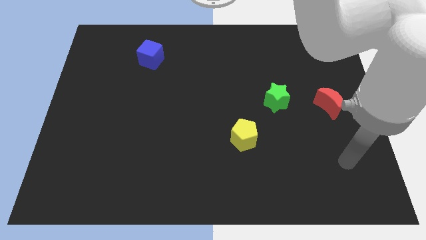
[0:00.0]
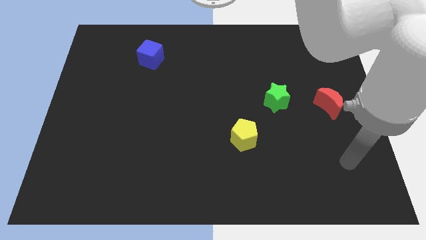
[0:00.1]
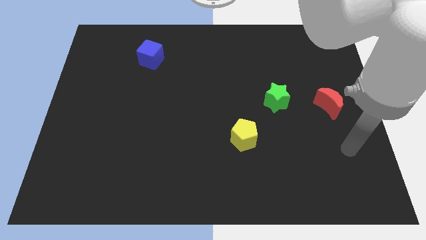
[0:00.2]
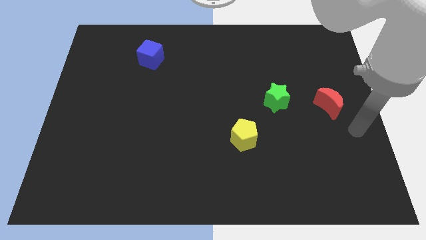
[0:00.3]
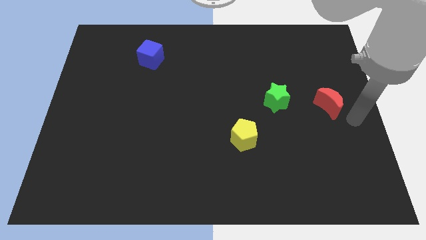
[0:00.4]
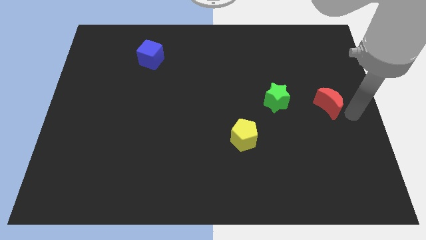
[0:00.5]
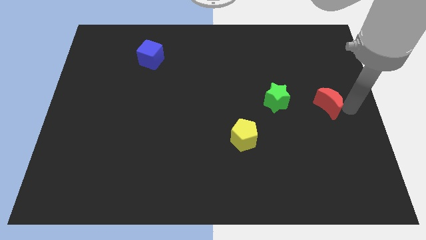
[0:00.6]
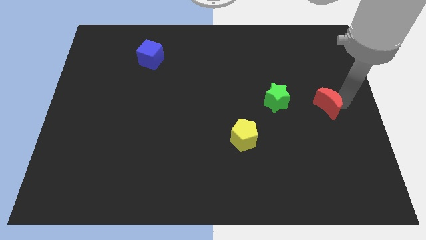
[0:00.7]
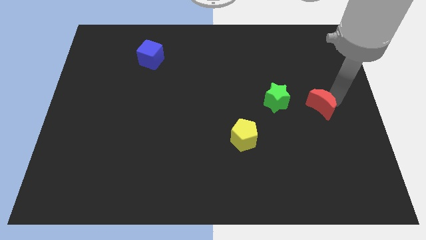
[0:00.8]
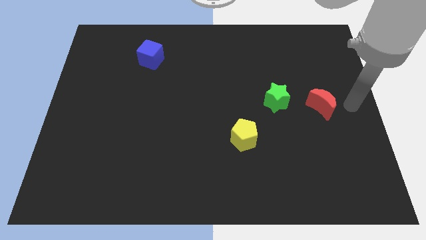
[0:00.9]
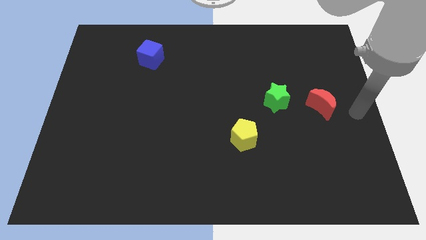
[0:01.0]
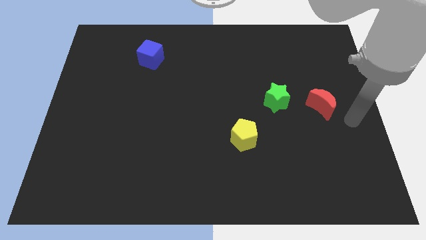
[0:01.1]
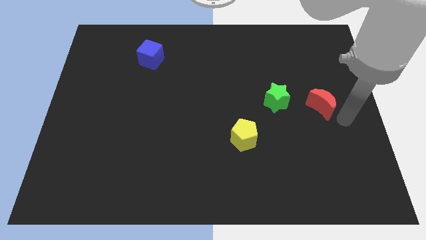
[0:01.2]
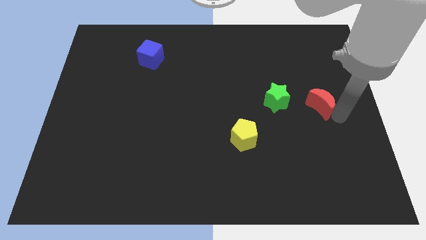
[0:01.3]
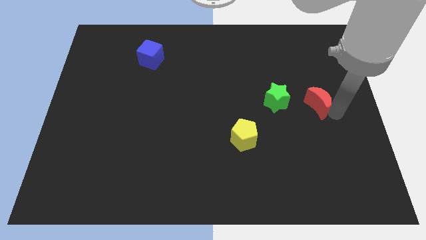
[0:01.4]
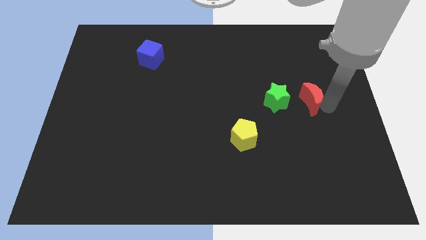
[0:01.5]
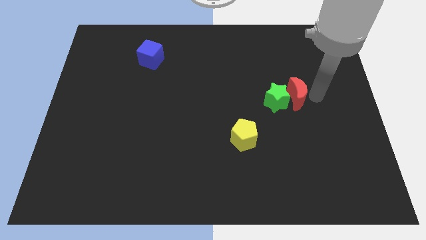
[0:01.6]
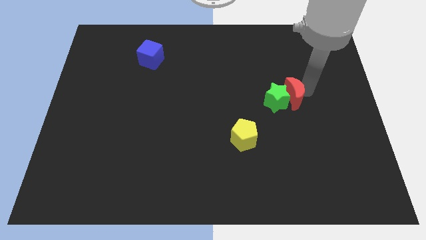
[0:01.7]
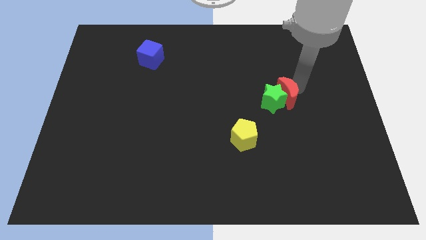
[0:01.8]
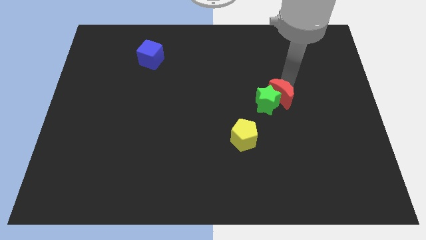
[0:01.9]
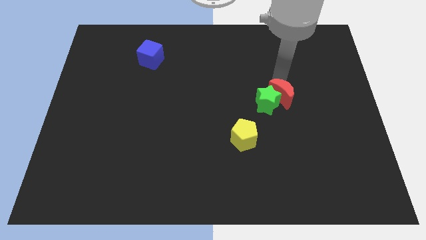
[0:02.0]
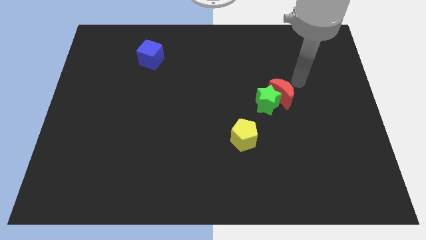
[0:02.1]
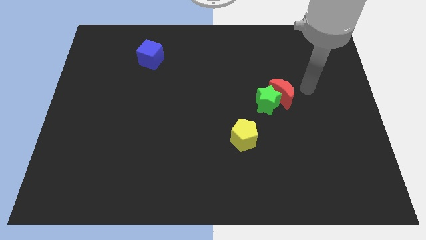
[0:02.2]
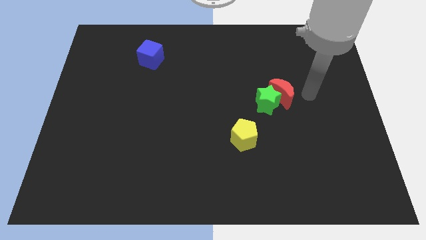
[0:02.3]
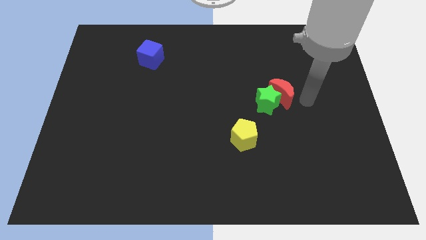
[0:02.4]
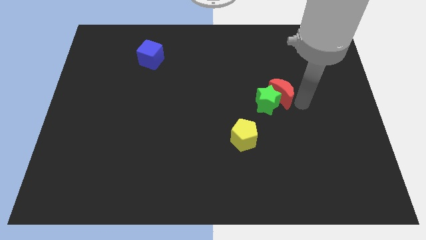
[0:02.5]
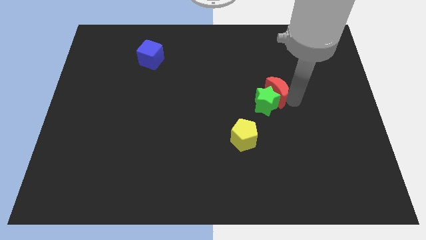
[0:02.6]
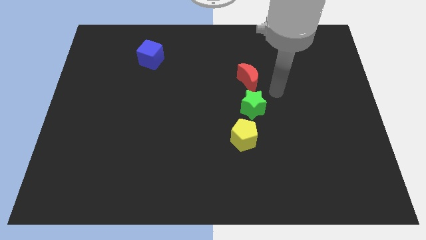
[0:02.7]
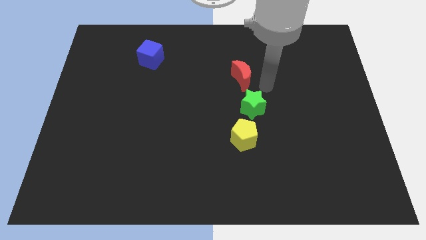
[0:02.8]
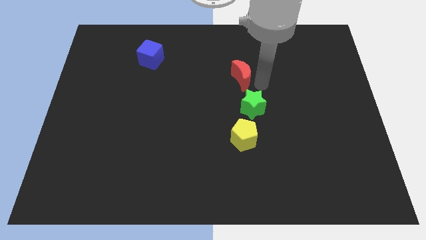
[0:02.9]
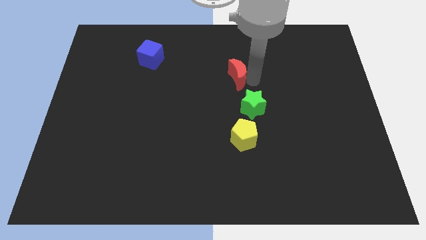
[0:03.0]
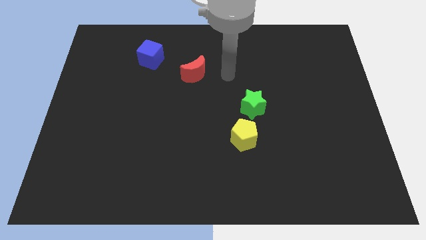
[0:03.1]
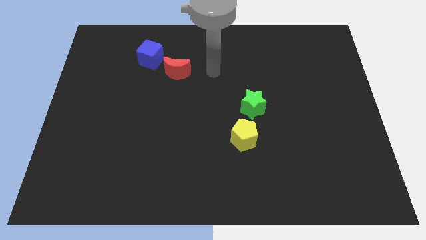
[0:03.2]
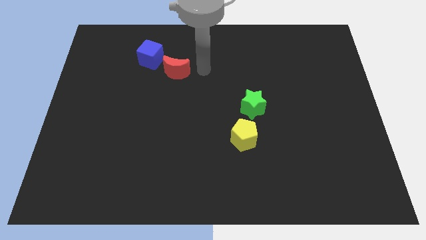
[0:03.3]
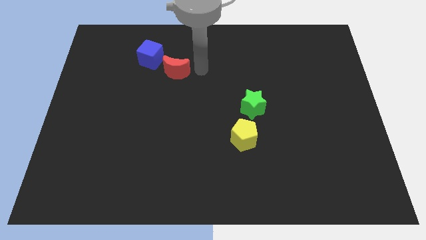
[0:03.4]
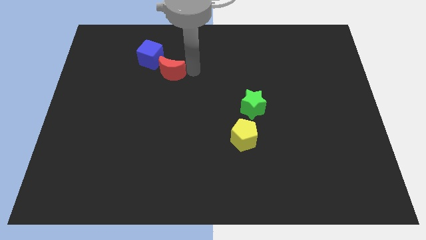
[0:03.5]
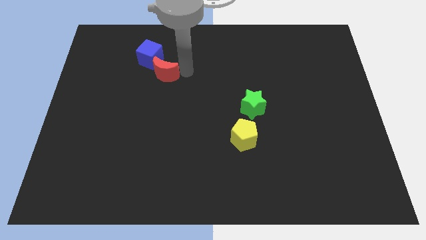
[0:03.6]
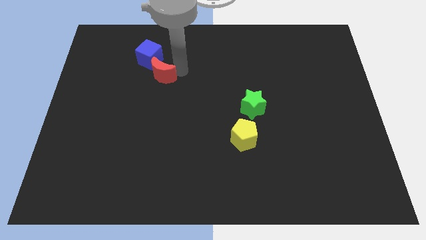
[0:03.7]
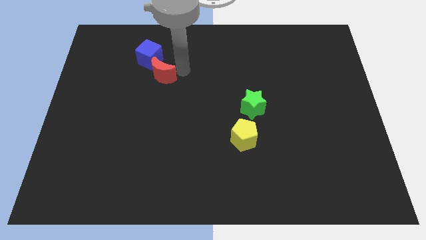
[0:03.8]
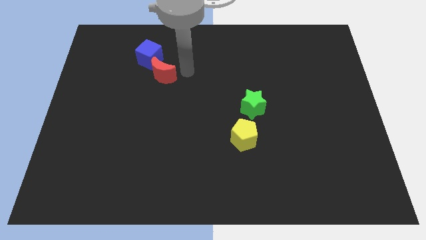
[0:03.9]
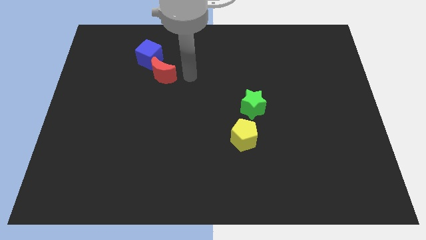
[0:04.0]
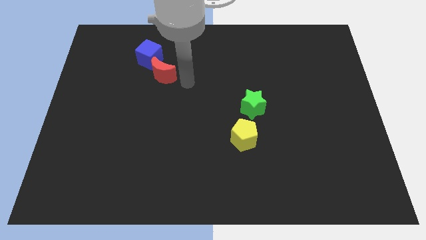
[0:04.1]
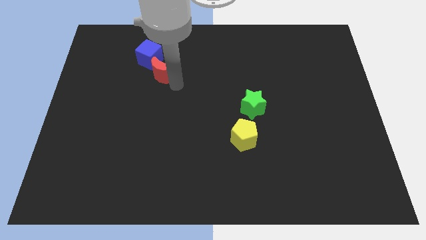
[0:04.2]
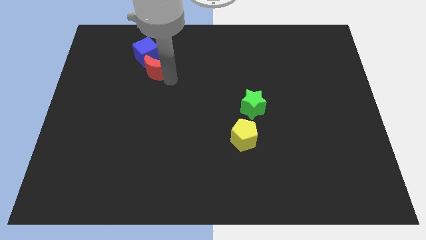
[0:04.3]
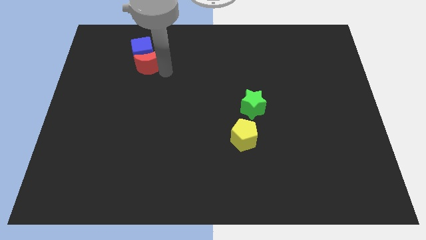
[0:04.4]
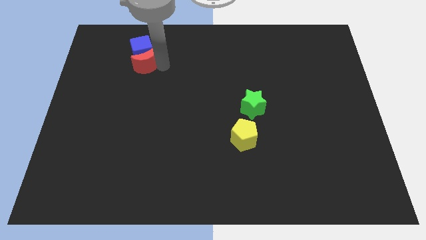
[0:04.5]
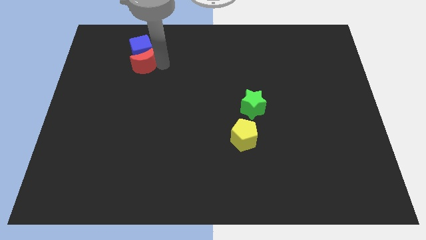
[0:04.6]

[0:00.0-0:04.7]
put the red block towards the blue block

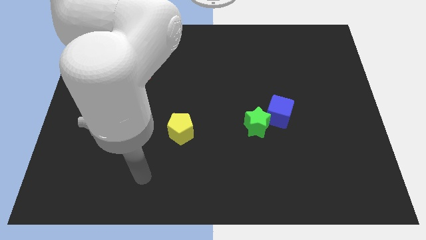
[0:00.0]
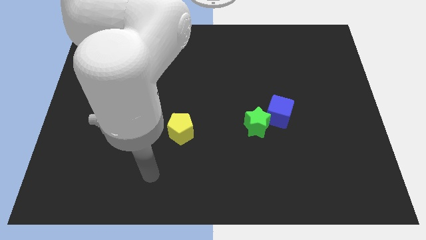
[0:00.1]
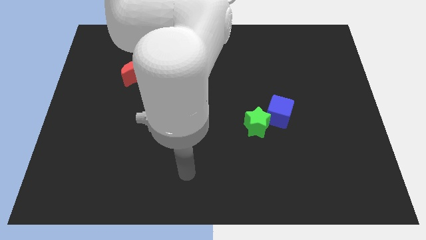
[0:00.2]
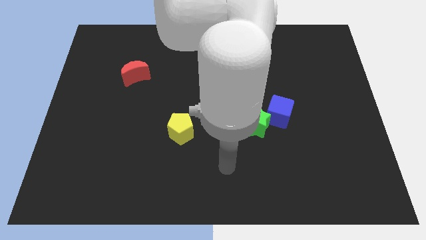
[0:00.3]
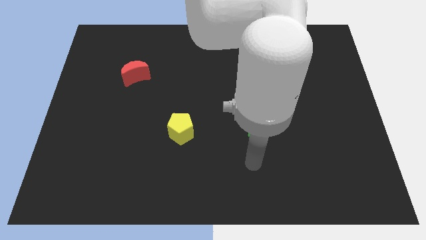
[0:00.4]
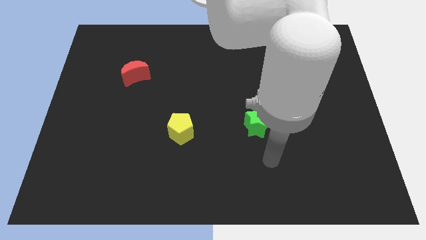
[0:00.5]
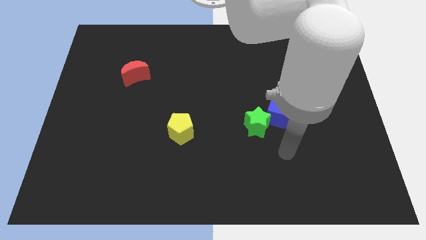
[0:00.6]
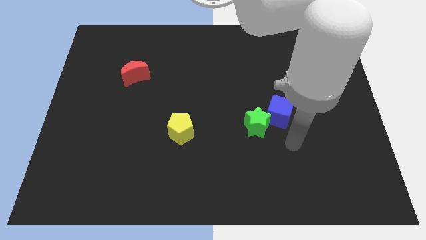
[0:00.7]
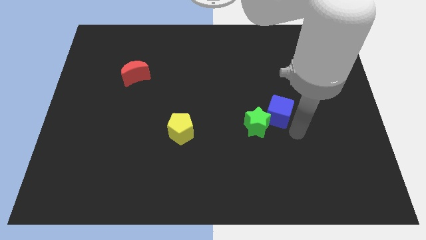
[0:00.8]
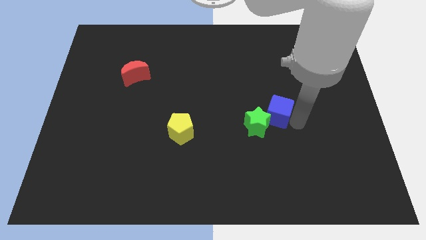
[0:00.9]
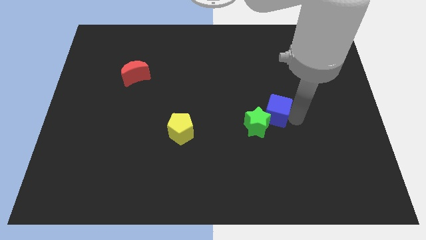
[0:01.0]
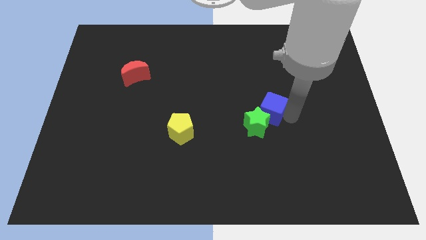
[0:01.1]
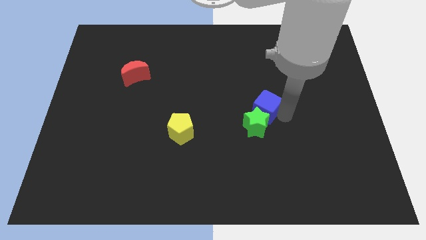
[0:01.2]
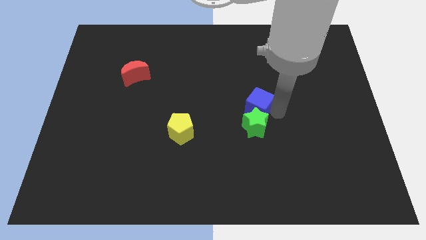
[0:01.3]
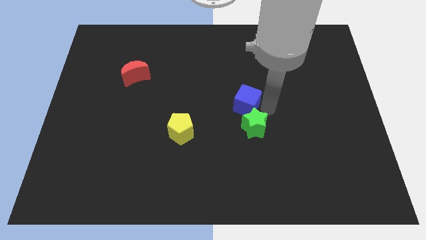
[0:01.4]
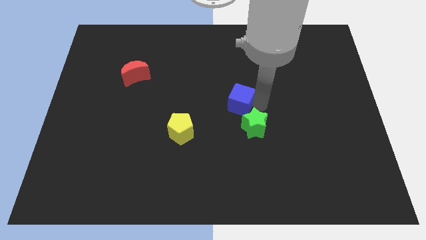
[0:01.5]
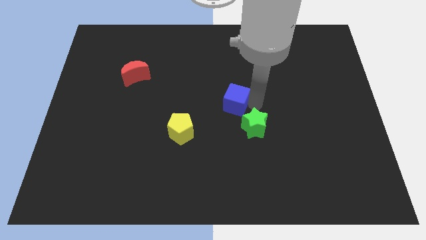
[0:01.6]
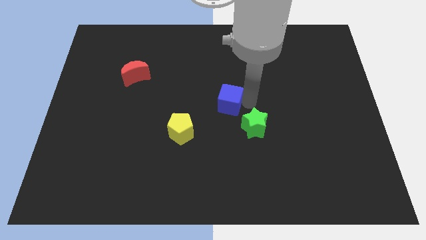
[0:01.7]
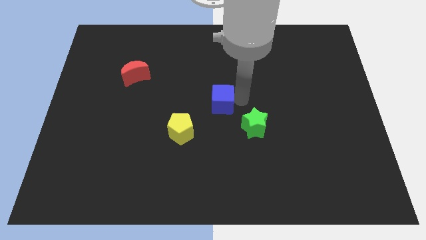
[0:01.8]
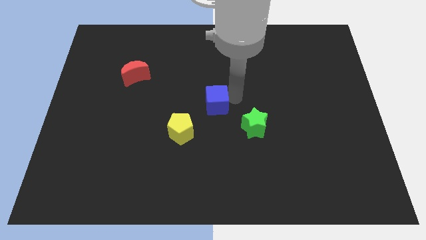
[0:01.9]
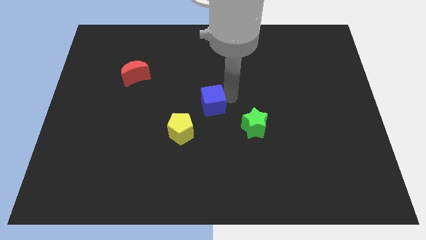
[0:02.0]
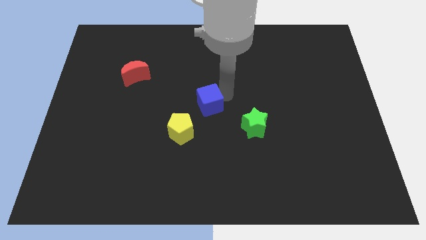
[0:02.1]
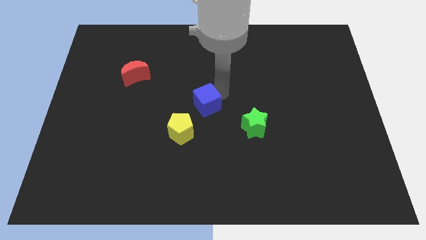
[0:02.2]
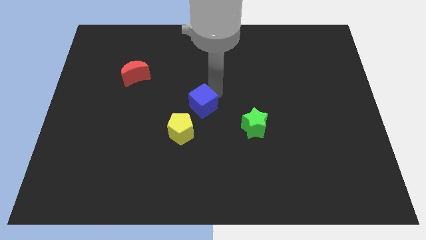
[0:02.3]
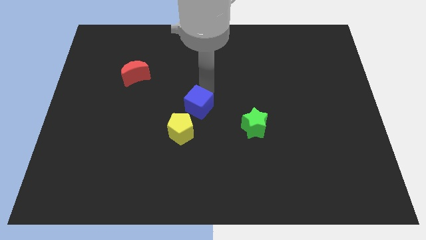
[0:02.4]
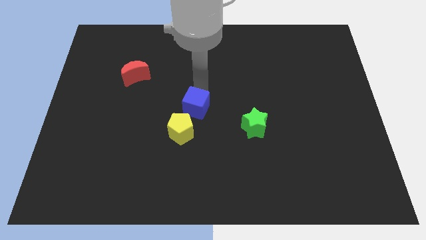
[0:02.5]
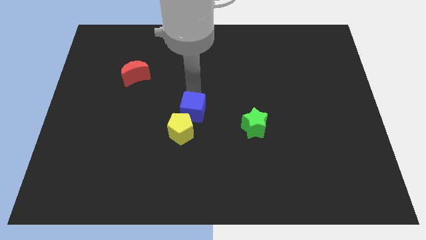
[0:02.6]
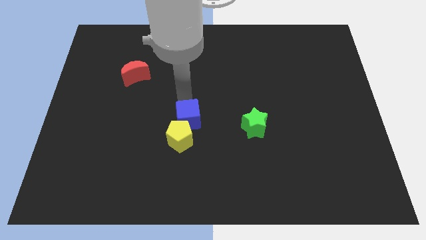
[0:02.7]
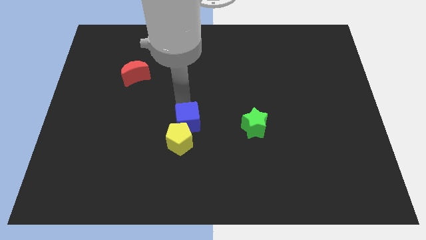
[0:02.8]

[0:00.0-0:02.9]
put the cube towards the yellow block

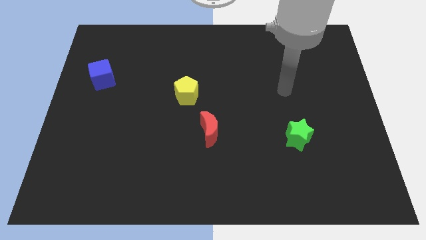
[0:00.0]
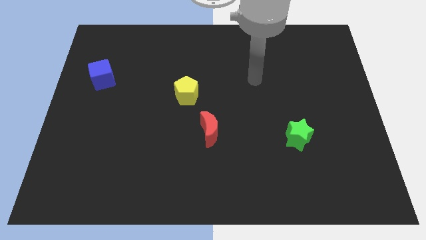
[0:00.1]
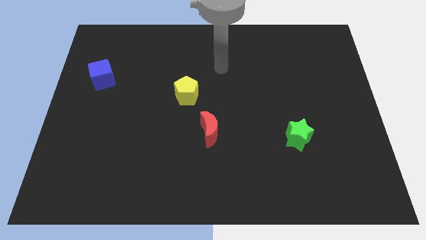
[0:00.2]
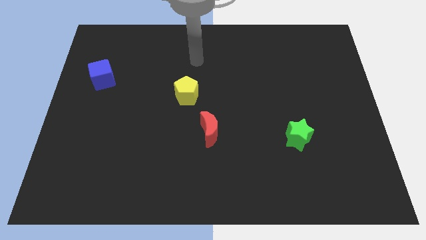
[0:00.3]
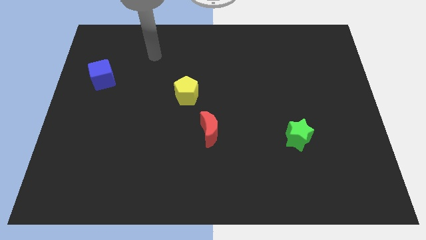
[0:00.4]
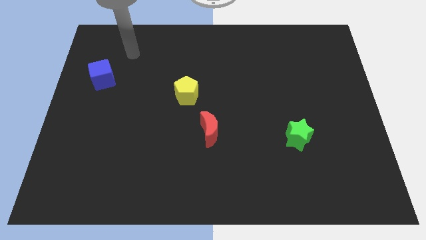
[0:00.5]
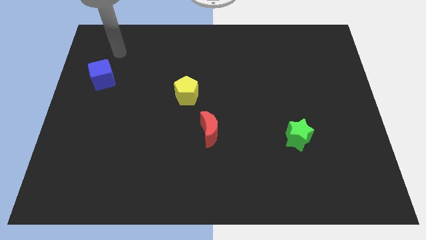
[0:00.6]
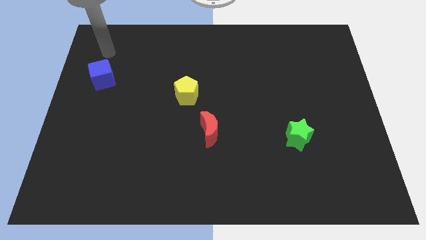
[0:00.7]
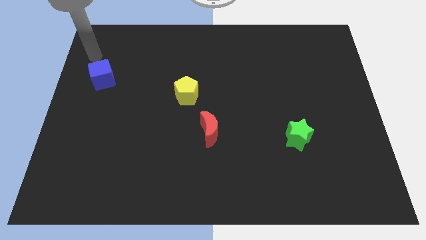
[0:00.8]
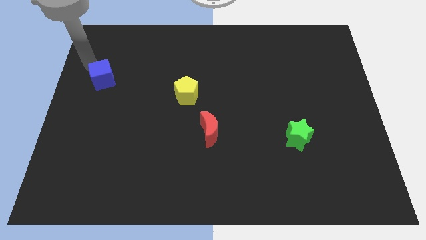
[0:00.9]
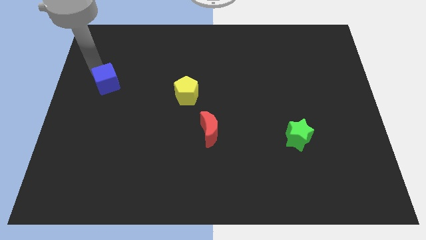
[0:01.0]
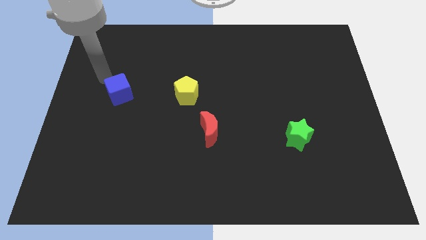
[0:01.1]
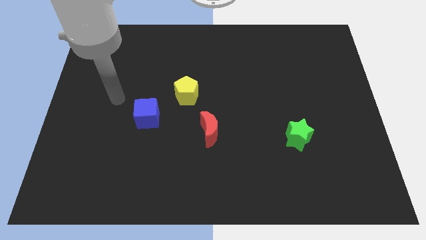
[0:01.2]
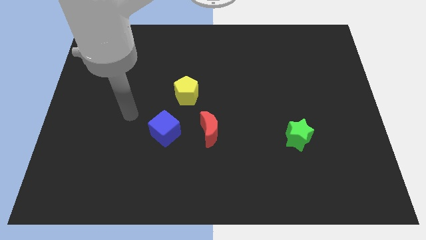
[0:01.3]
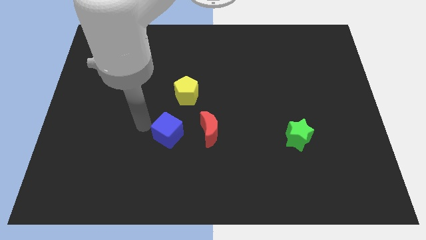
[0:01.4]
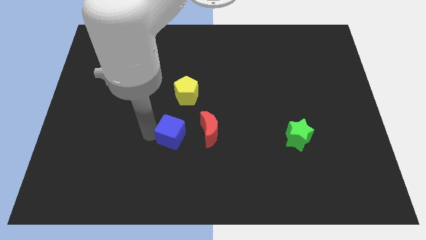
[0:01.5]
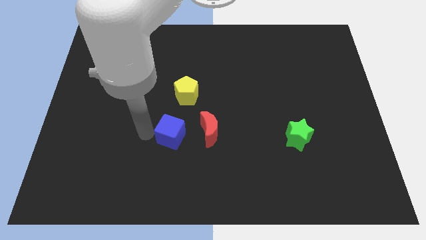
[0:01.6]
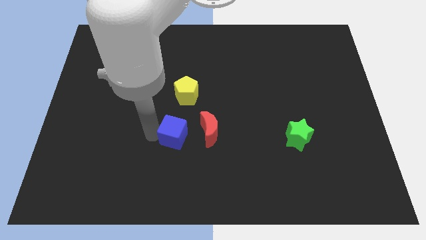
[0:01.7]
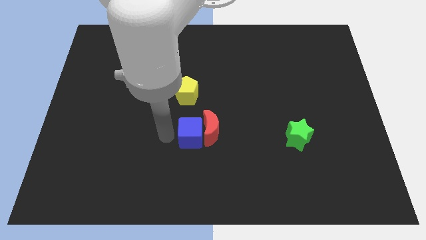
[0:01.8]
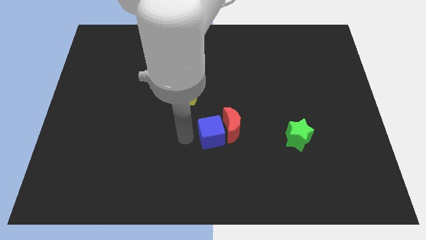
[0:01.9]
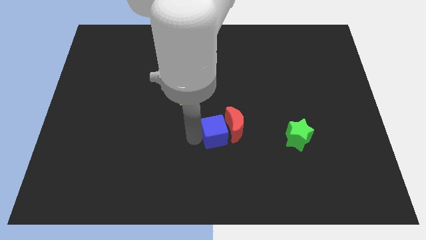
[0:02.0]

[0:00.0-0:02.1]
slide the cube to the moon
